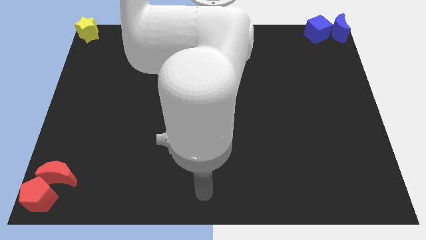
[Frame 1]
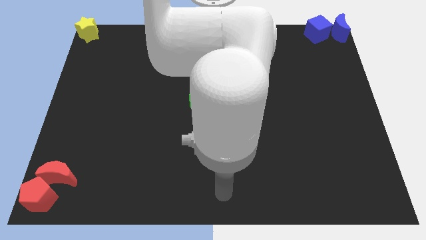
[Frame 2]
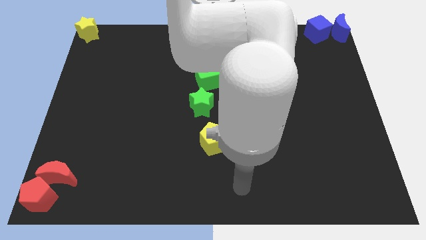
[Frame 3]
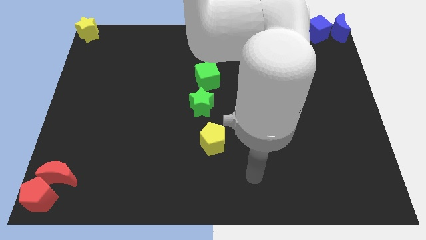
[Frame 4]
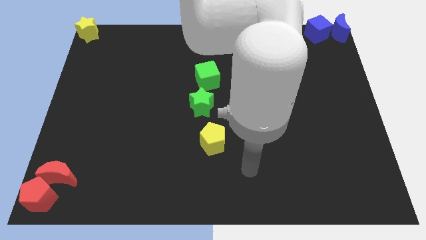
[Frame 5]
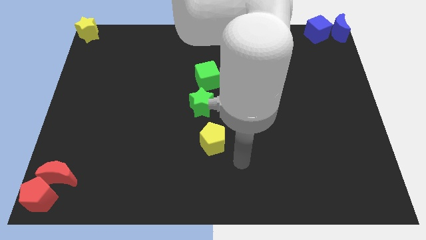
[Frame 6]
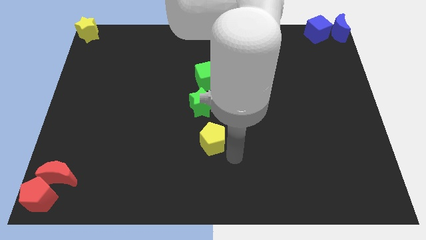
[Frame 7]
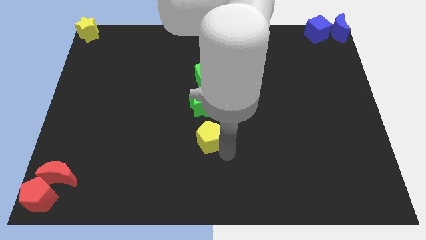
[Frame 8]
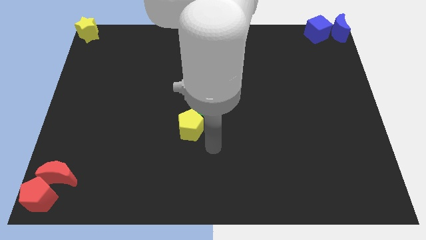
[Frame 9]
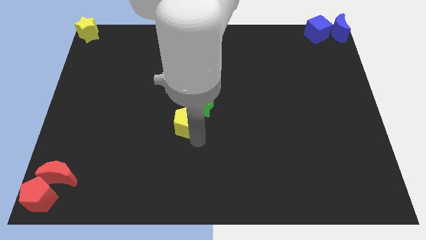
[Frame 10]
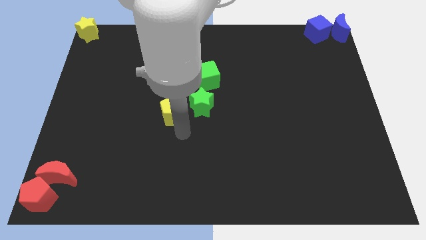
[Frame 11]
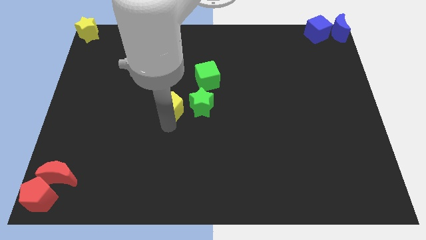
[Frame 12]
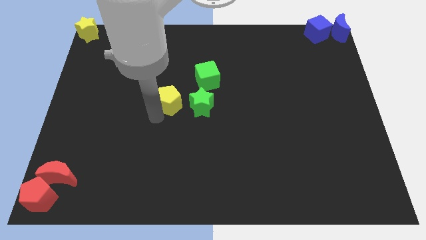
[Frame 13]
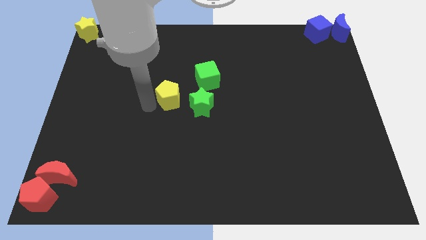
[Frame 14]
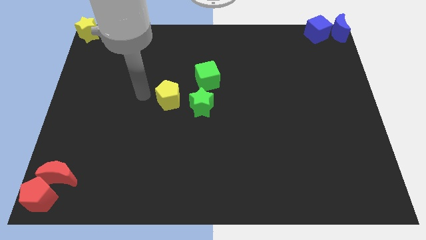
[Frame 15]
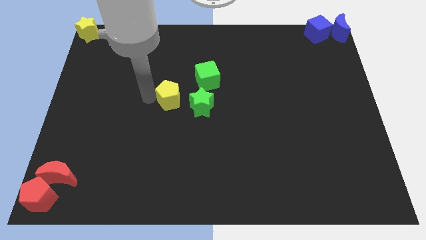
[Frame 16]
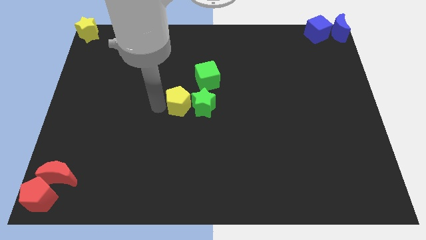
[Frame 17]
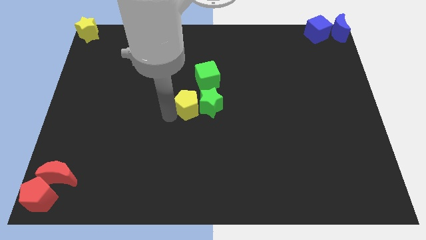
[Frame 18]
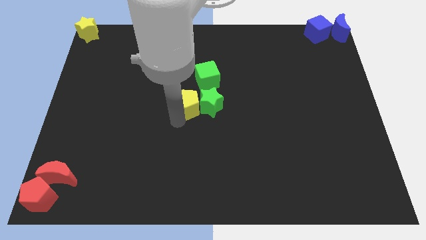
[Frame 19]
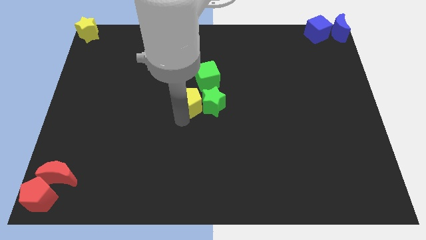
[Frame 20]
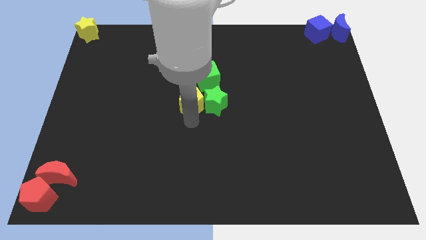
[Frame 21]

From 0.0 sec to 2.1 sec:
slide the yellow pentagon to the left of the green star

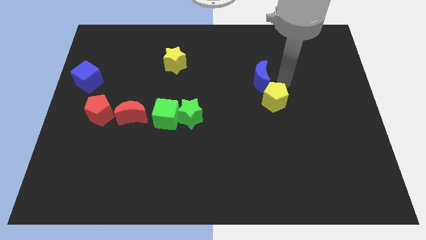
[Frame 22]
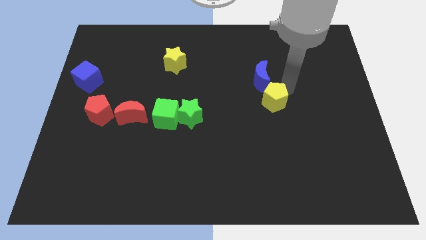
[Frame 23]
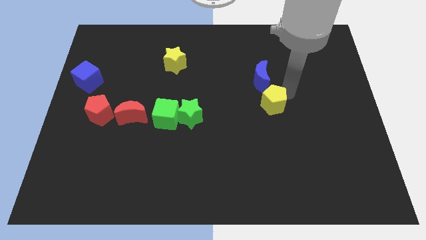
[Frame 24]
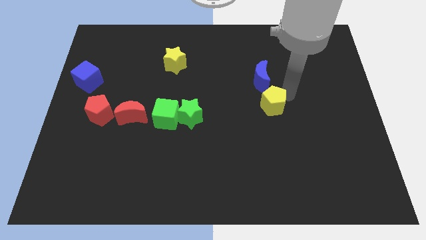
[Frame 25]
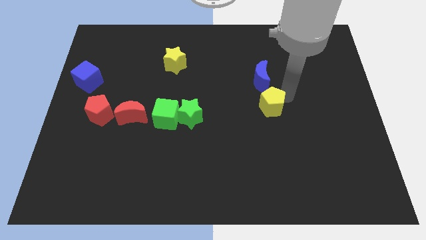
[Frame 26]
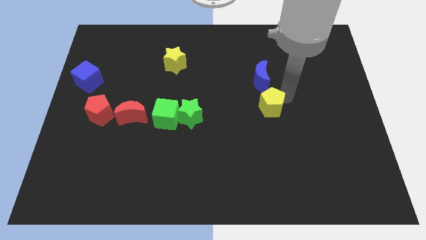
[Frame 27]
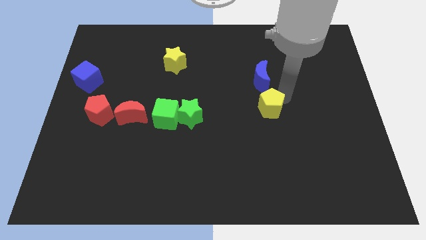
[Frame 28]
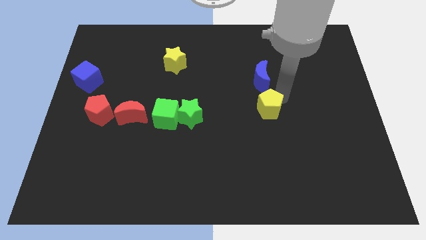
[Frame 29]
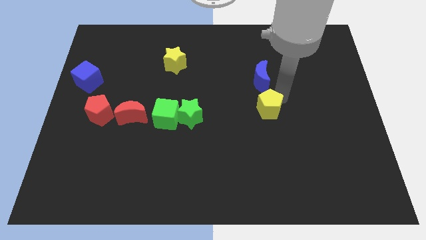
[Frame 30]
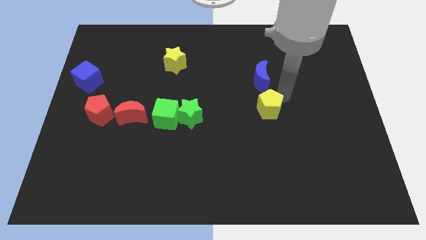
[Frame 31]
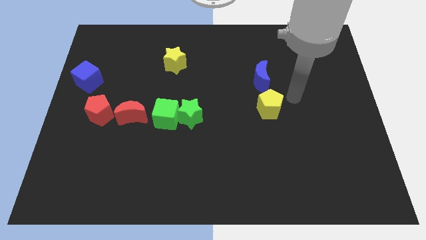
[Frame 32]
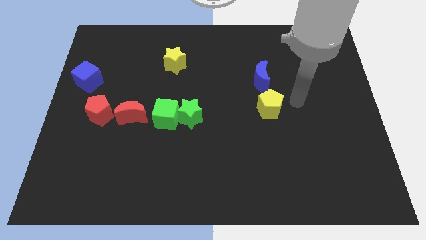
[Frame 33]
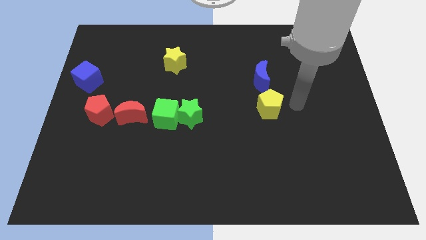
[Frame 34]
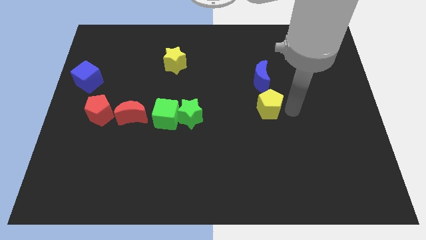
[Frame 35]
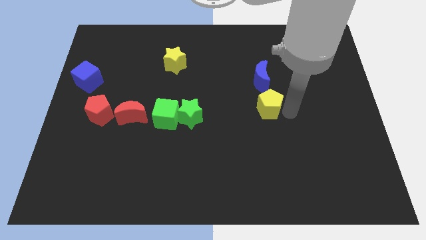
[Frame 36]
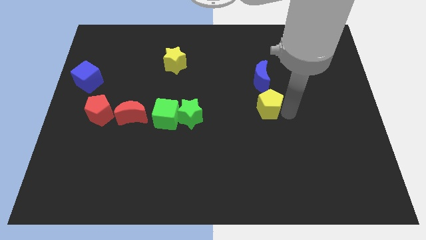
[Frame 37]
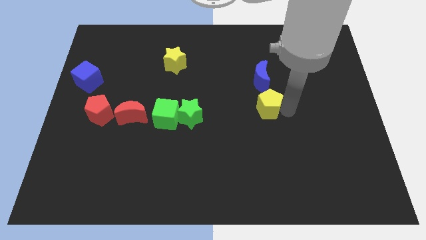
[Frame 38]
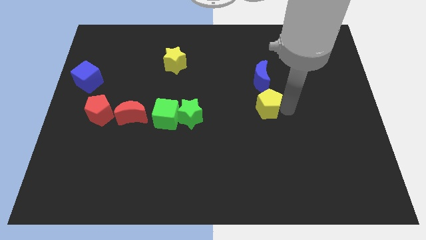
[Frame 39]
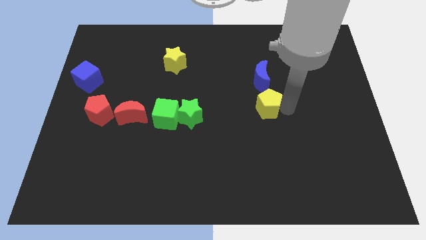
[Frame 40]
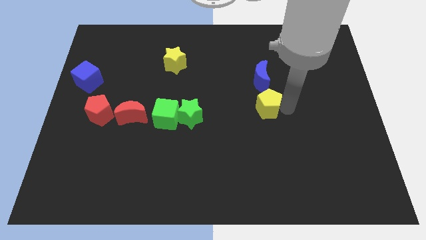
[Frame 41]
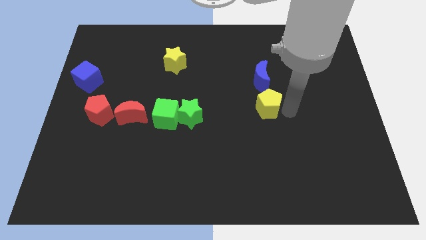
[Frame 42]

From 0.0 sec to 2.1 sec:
push yellow pentagon below blue crescent

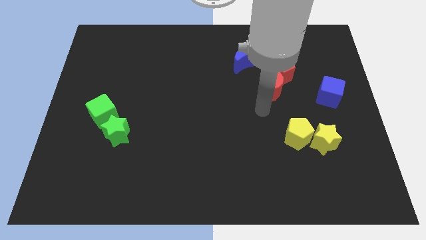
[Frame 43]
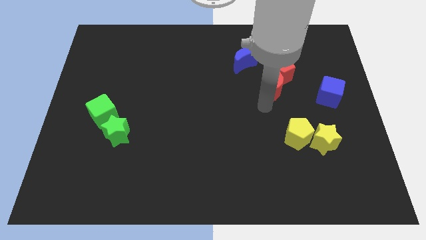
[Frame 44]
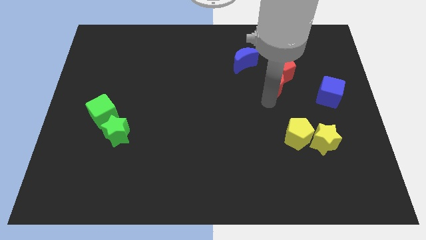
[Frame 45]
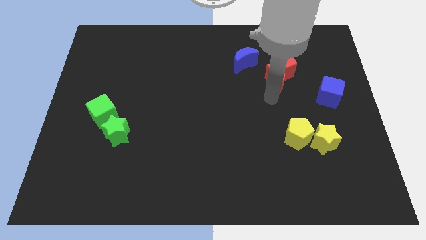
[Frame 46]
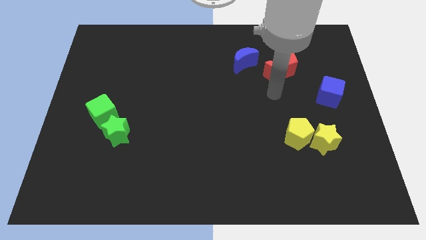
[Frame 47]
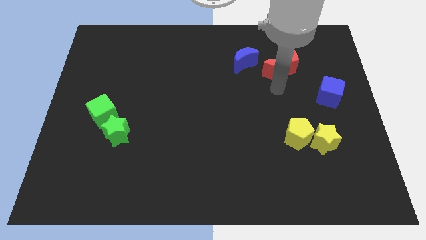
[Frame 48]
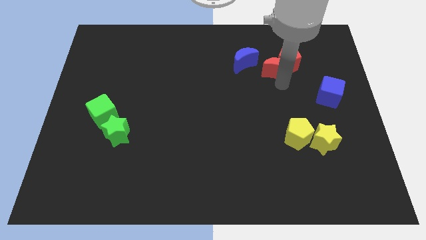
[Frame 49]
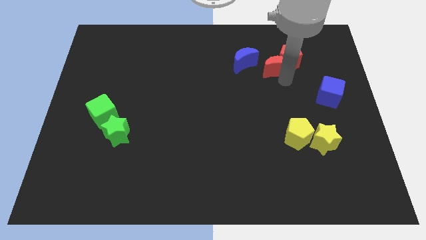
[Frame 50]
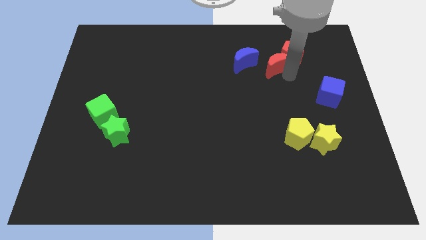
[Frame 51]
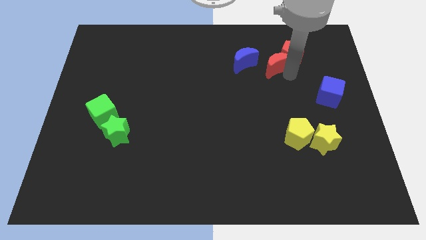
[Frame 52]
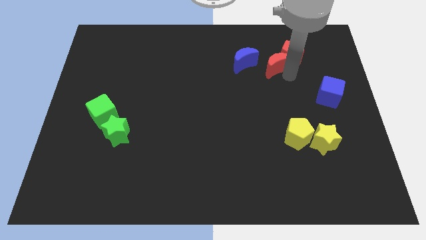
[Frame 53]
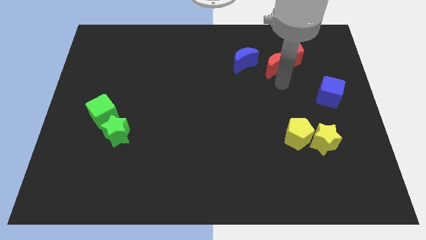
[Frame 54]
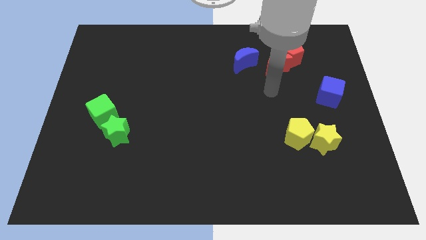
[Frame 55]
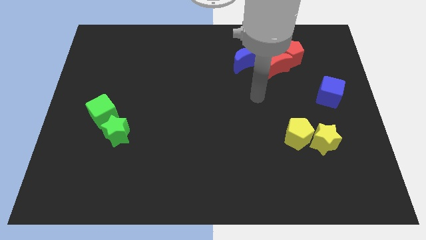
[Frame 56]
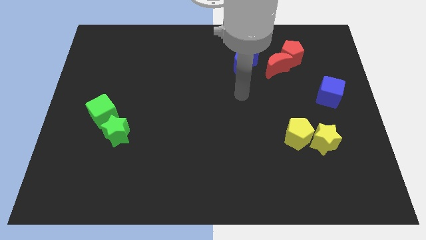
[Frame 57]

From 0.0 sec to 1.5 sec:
push the group of red blocks towards the top right

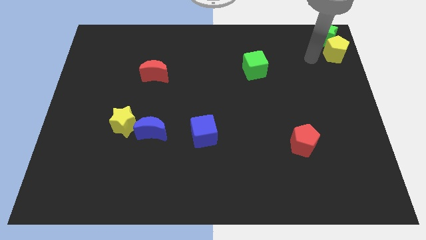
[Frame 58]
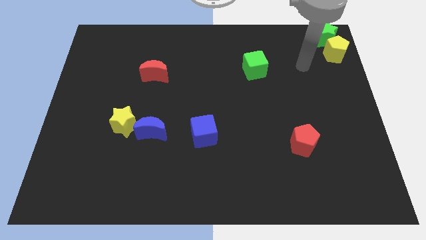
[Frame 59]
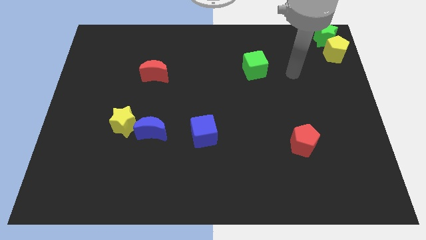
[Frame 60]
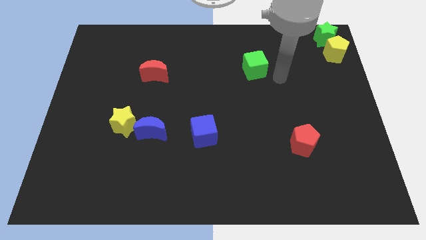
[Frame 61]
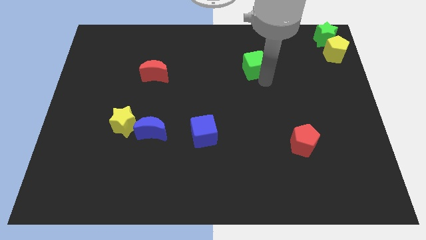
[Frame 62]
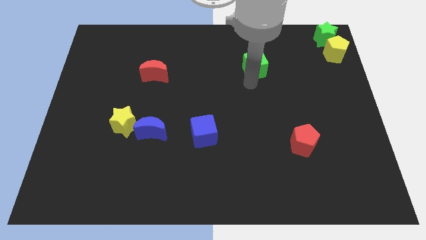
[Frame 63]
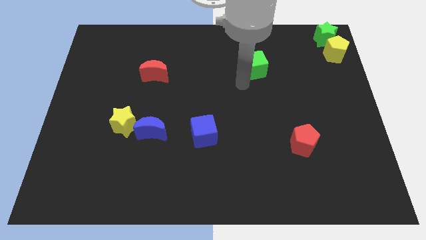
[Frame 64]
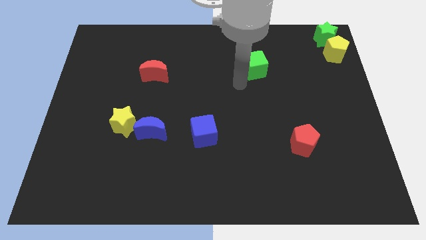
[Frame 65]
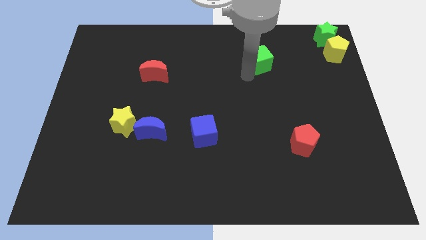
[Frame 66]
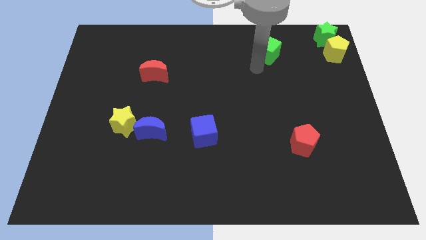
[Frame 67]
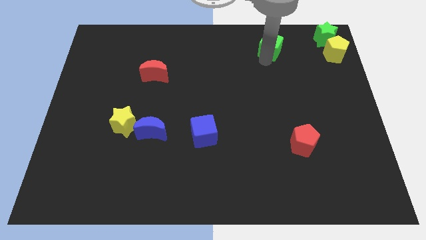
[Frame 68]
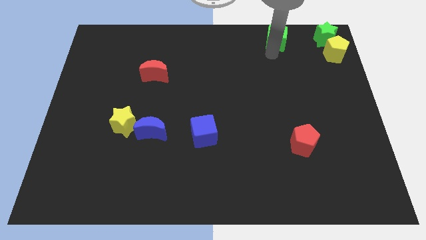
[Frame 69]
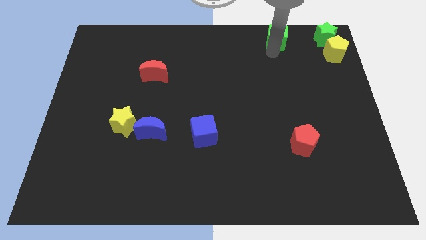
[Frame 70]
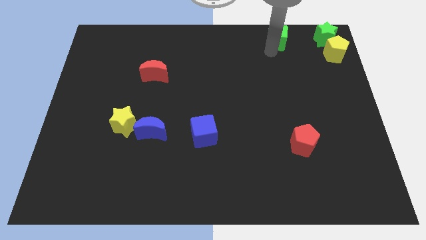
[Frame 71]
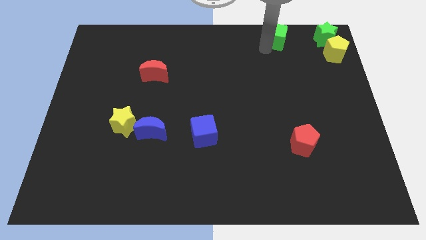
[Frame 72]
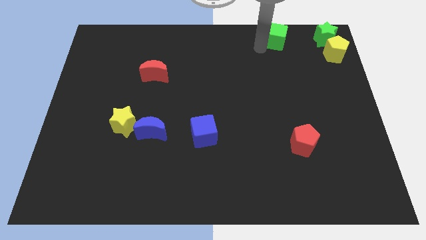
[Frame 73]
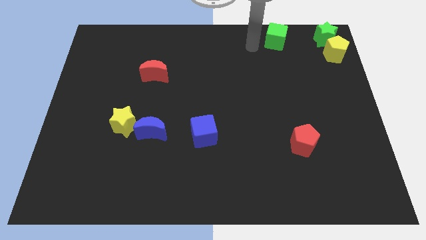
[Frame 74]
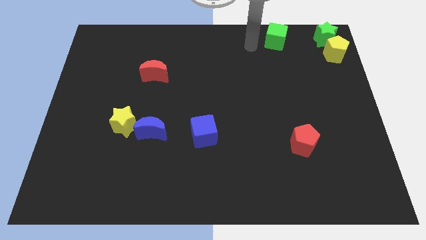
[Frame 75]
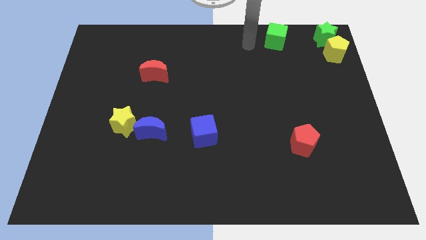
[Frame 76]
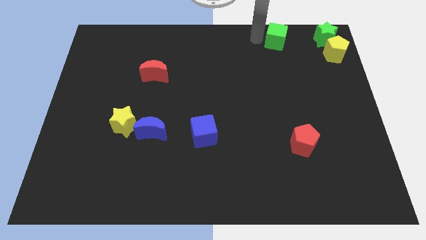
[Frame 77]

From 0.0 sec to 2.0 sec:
place a green cube on top side of the board

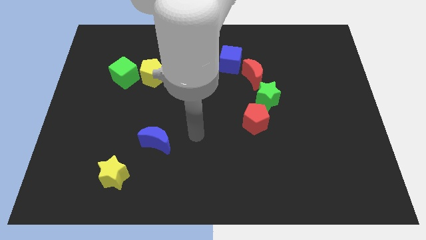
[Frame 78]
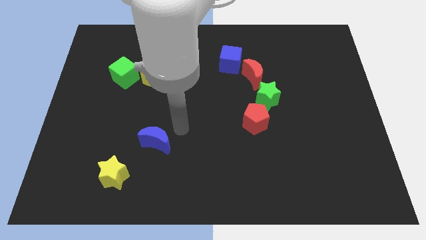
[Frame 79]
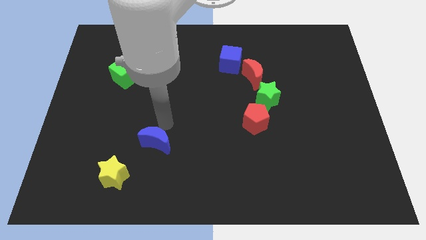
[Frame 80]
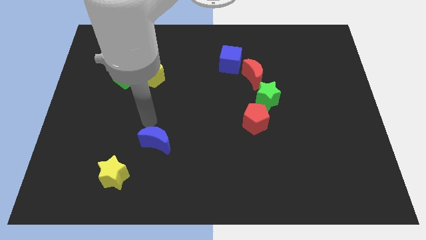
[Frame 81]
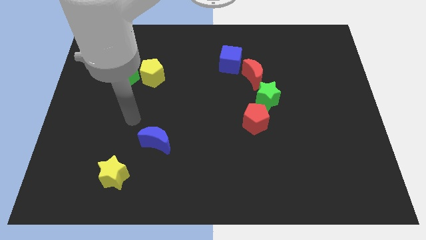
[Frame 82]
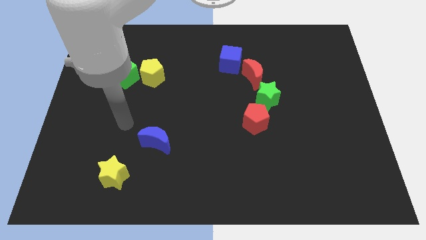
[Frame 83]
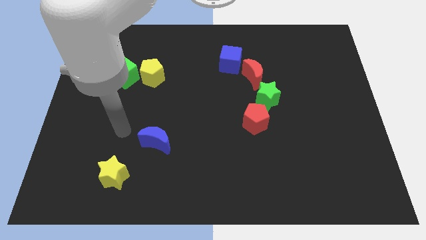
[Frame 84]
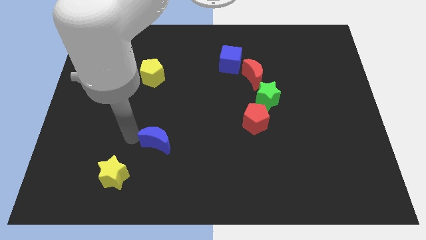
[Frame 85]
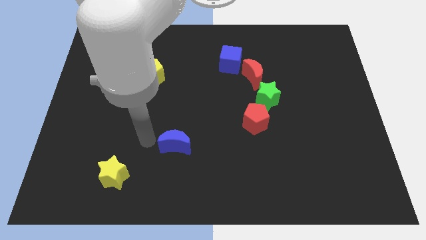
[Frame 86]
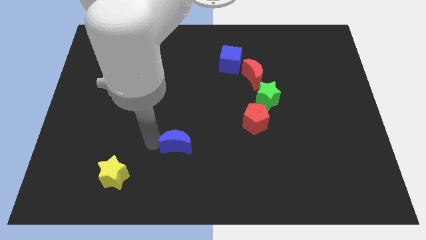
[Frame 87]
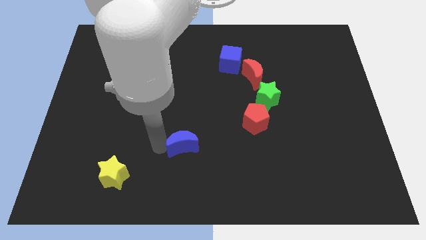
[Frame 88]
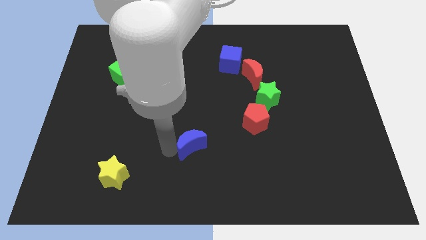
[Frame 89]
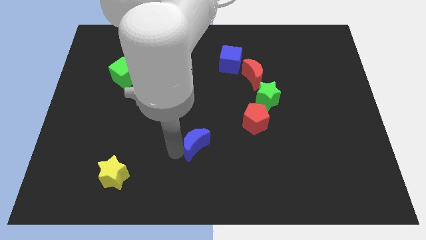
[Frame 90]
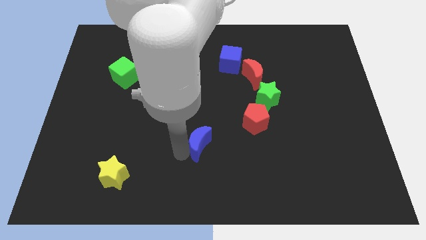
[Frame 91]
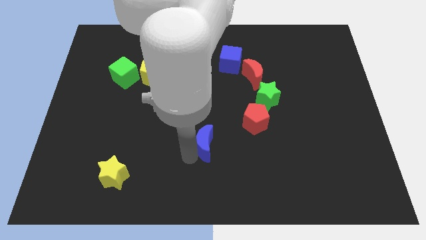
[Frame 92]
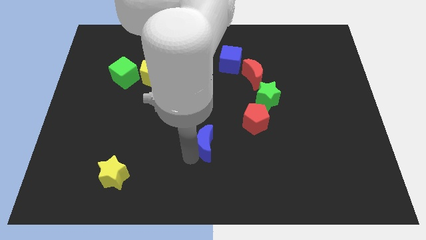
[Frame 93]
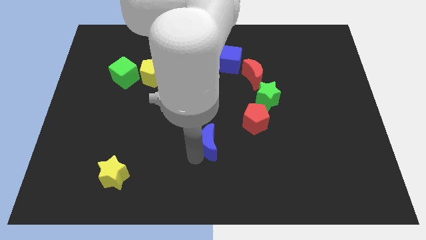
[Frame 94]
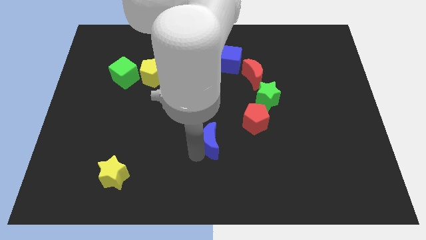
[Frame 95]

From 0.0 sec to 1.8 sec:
move the blue moon parallel to the bottom of the blue cube
